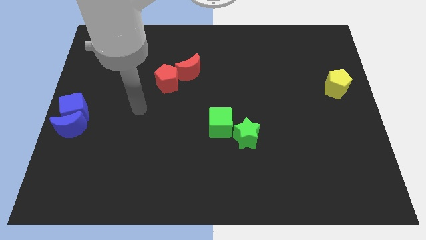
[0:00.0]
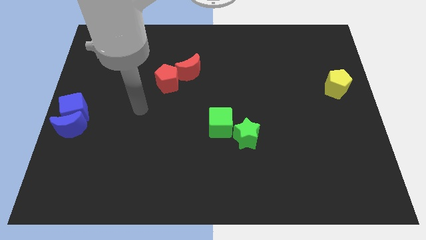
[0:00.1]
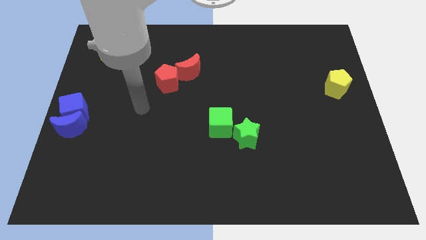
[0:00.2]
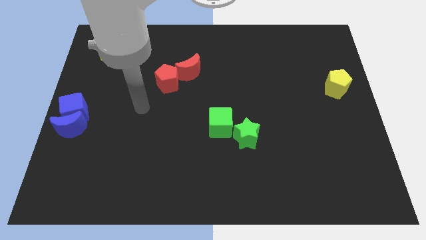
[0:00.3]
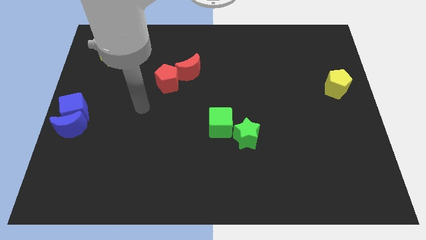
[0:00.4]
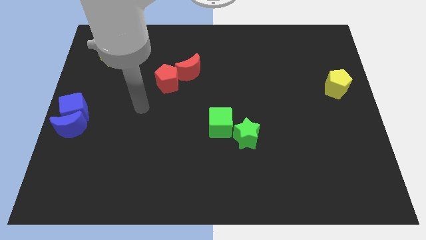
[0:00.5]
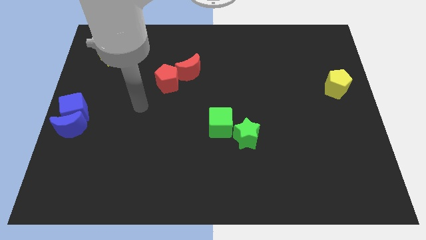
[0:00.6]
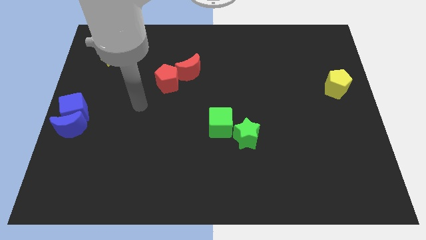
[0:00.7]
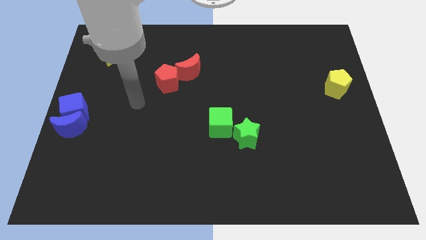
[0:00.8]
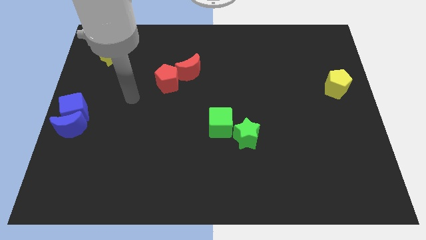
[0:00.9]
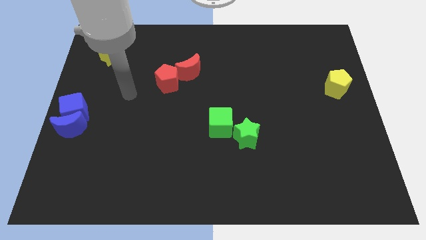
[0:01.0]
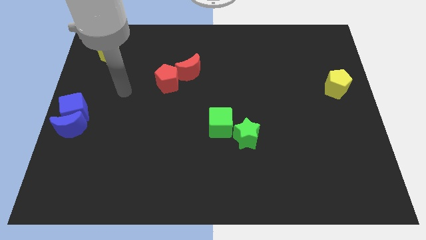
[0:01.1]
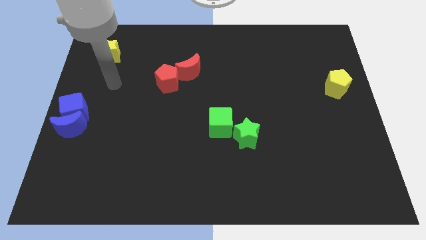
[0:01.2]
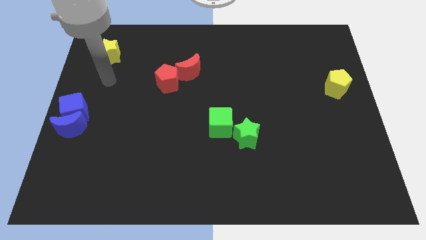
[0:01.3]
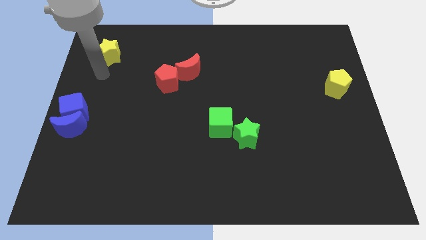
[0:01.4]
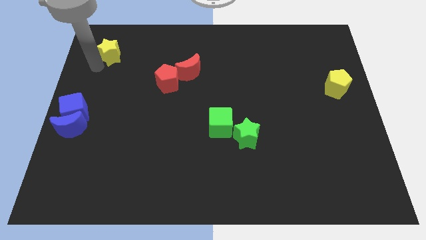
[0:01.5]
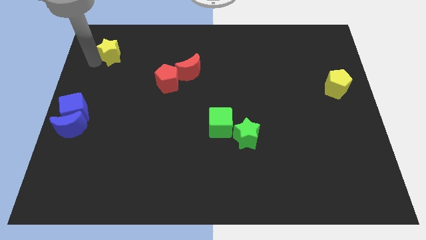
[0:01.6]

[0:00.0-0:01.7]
place your arm to the bottom of yellow star

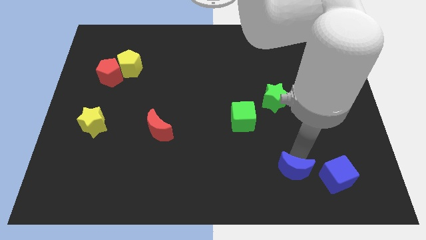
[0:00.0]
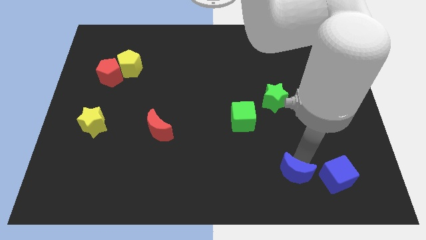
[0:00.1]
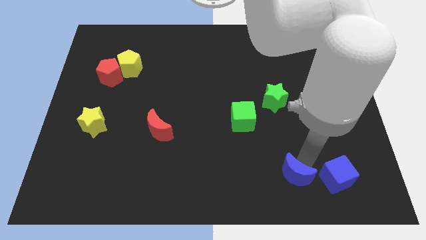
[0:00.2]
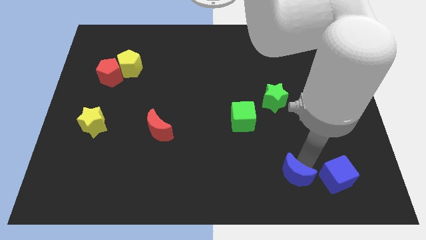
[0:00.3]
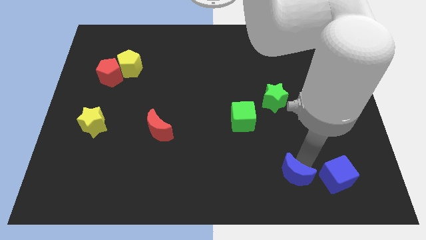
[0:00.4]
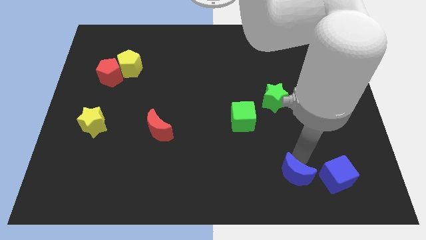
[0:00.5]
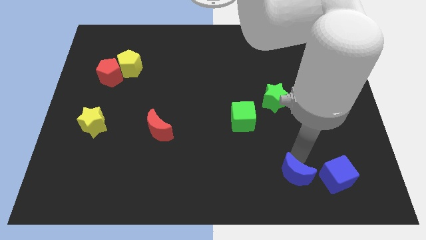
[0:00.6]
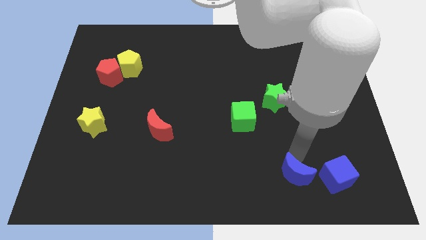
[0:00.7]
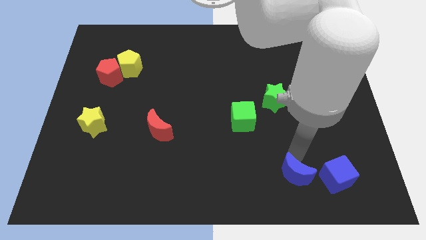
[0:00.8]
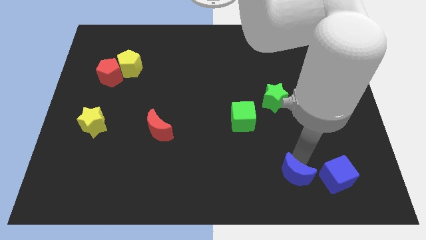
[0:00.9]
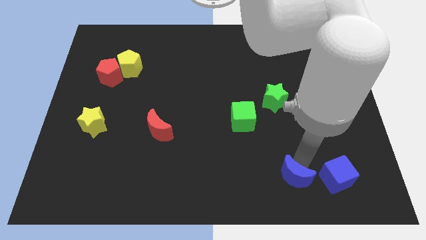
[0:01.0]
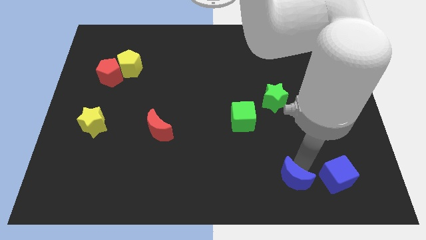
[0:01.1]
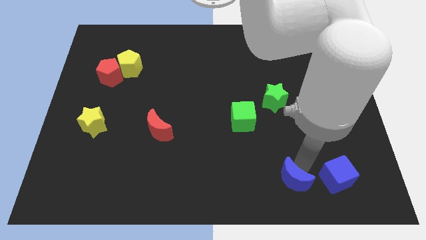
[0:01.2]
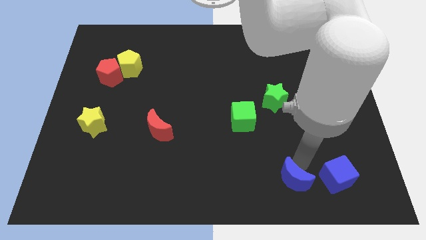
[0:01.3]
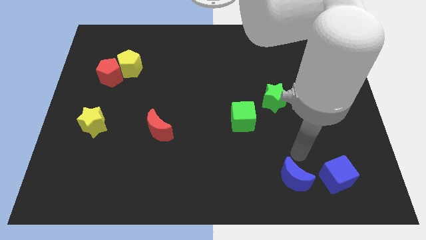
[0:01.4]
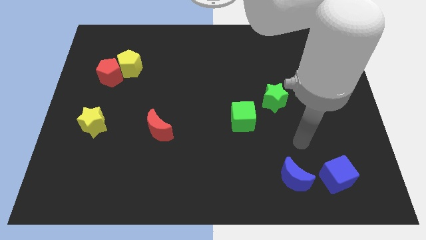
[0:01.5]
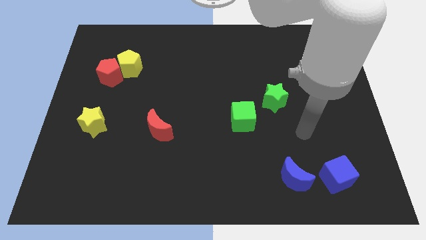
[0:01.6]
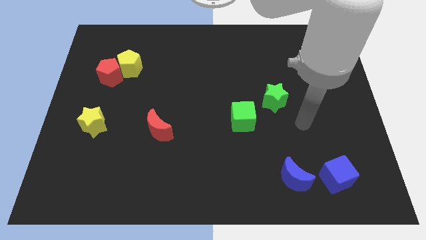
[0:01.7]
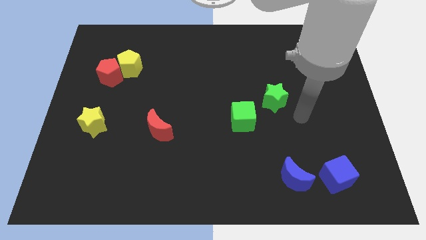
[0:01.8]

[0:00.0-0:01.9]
move the blue crescent to the left of the blue cube

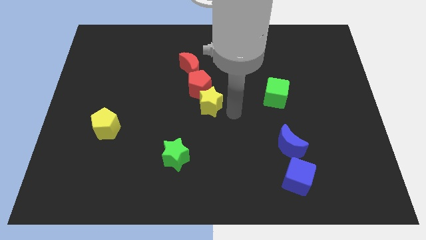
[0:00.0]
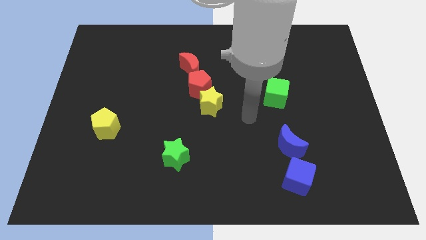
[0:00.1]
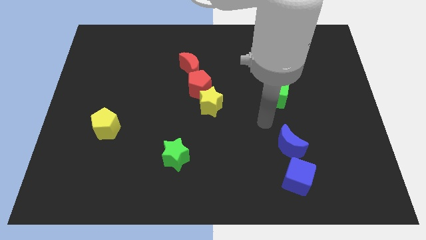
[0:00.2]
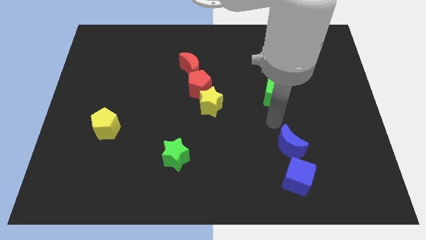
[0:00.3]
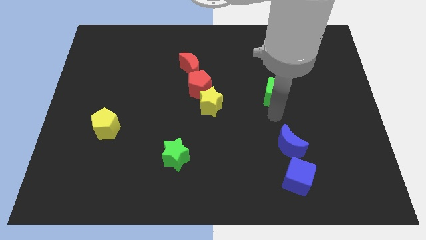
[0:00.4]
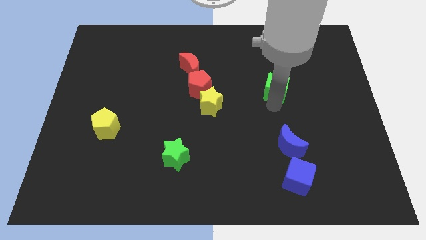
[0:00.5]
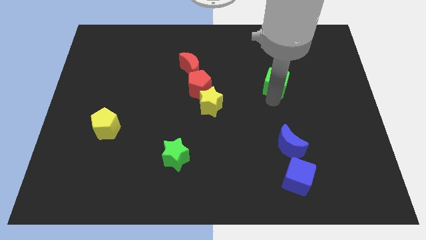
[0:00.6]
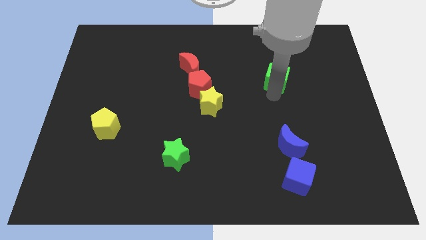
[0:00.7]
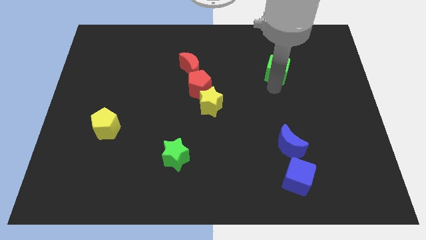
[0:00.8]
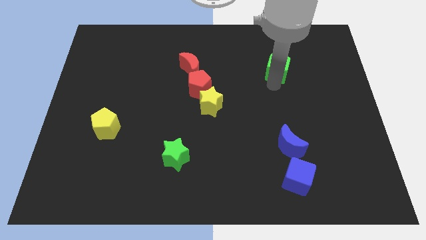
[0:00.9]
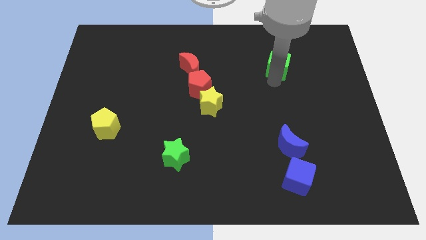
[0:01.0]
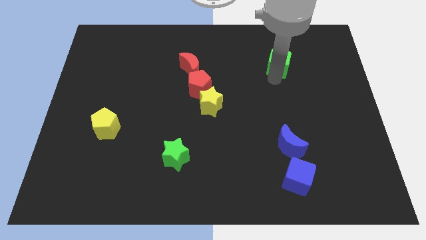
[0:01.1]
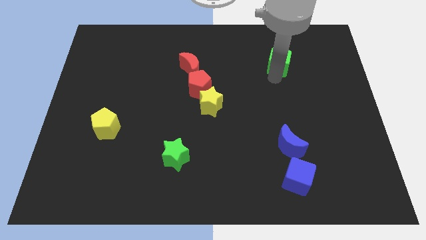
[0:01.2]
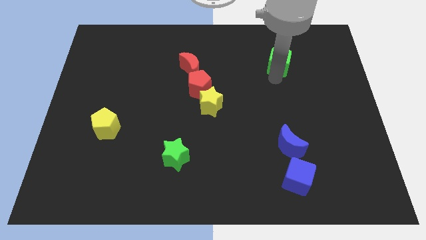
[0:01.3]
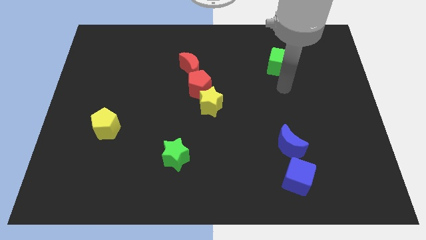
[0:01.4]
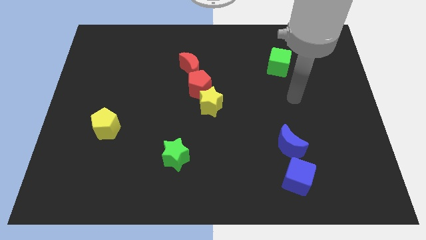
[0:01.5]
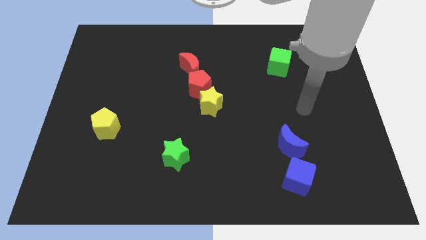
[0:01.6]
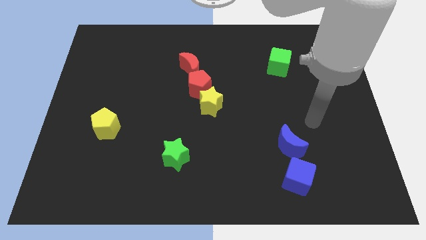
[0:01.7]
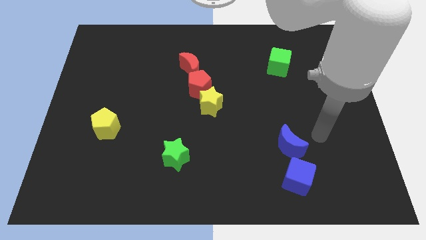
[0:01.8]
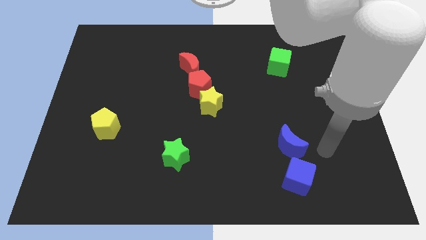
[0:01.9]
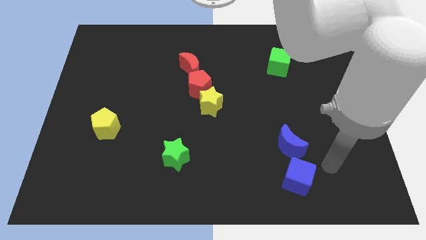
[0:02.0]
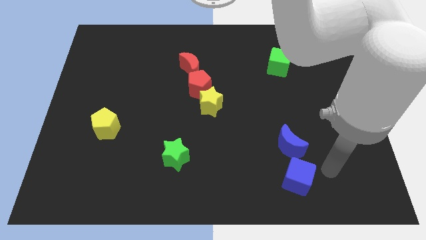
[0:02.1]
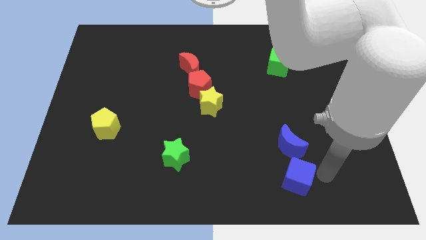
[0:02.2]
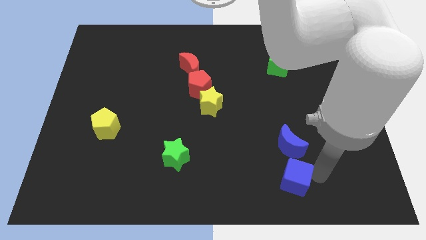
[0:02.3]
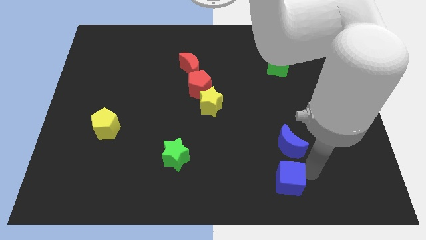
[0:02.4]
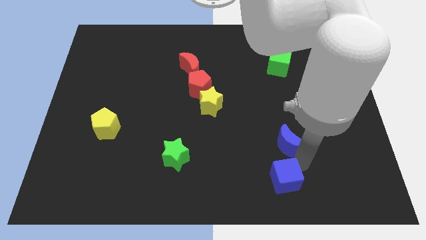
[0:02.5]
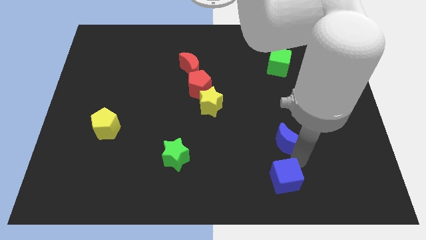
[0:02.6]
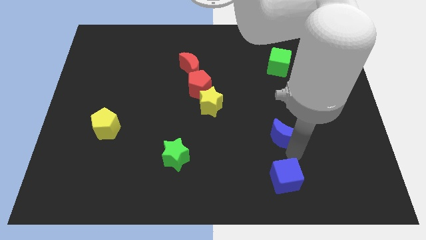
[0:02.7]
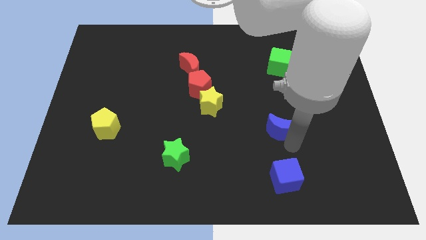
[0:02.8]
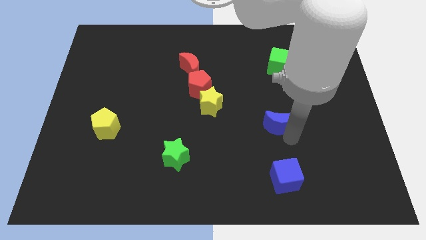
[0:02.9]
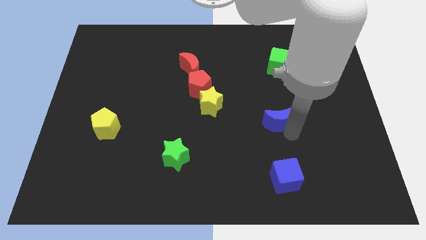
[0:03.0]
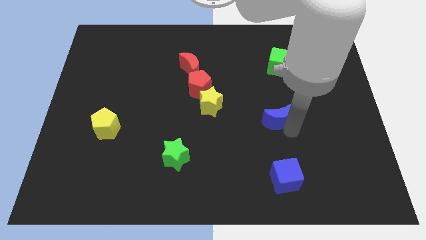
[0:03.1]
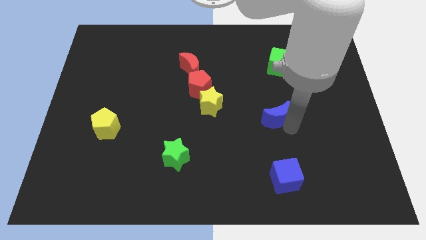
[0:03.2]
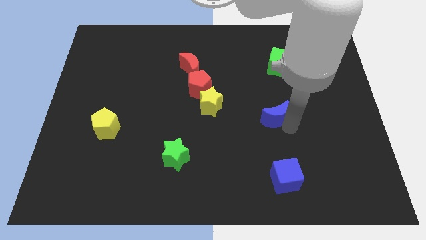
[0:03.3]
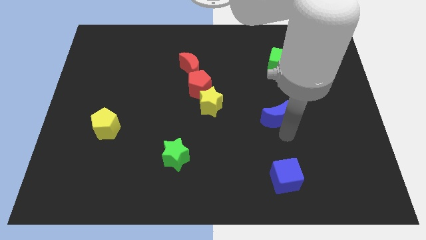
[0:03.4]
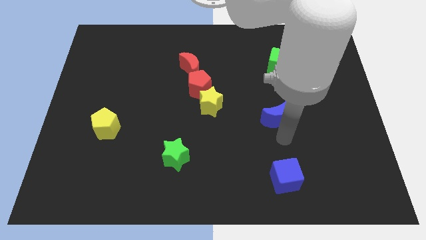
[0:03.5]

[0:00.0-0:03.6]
move blue moon towards the green cube and blue cube

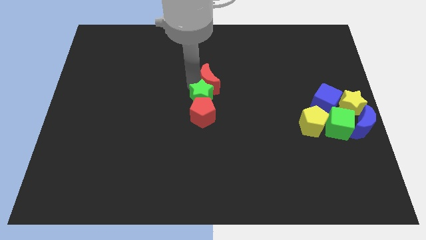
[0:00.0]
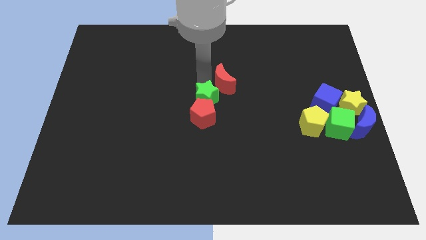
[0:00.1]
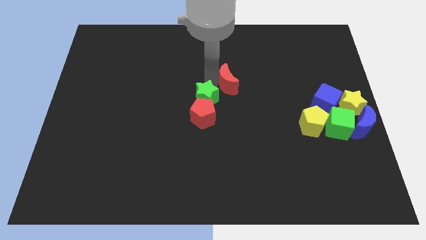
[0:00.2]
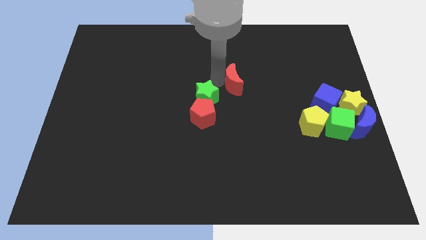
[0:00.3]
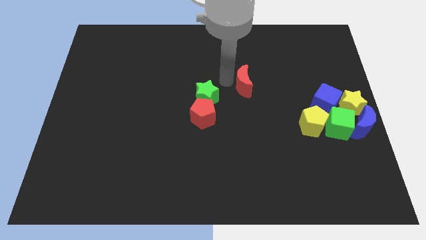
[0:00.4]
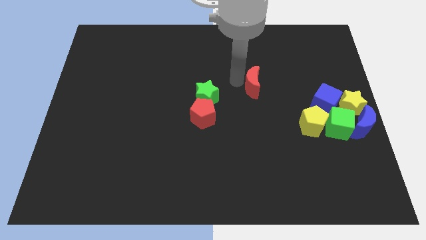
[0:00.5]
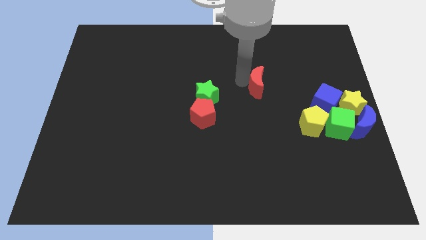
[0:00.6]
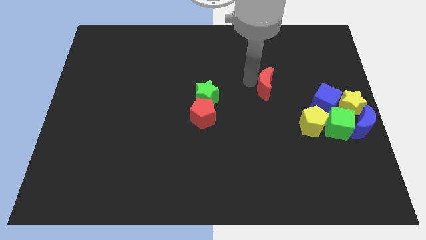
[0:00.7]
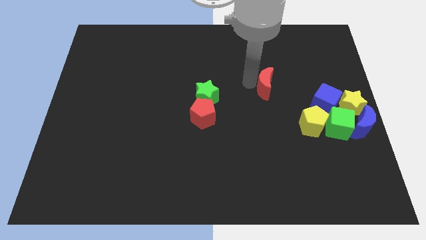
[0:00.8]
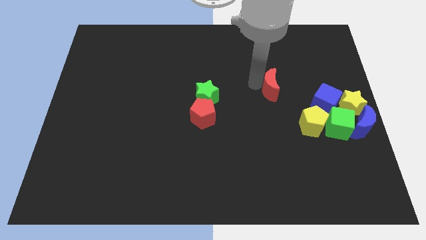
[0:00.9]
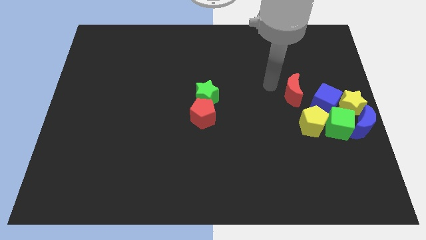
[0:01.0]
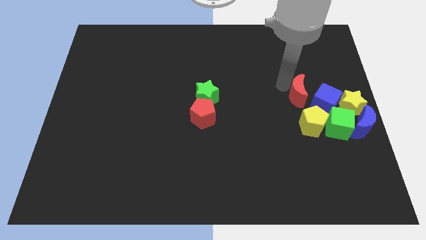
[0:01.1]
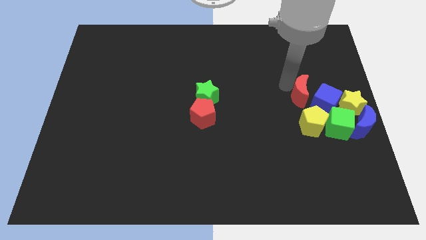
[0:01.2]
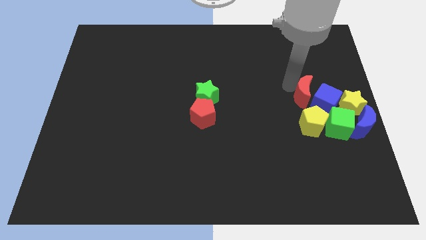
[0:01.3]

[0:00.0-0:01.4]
push the red moon to the right side of the board

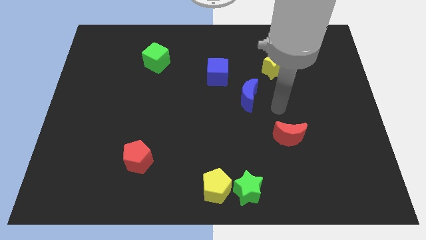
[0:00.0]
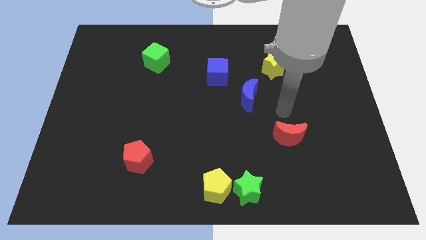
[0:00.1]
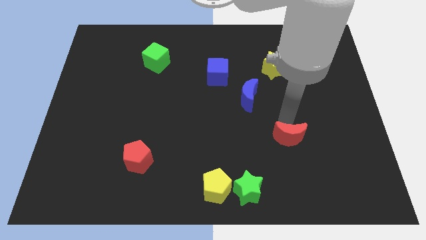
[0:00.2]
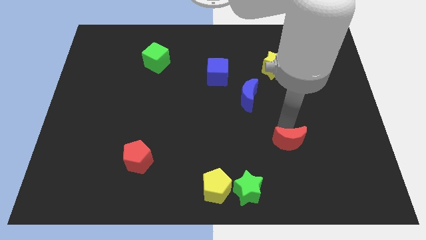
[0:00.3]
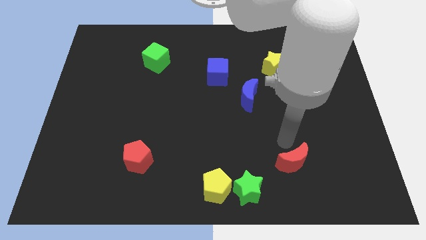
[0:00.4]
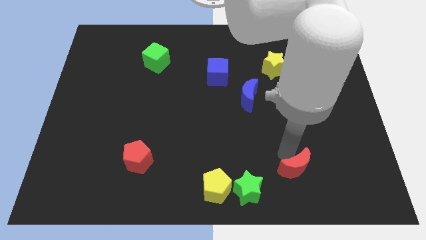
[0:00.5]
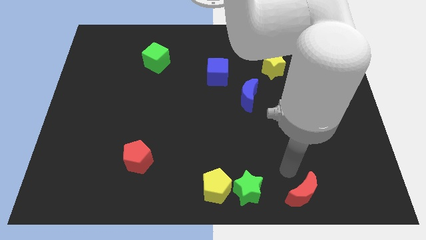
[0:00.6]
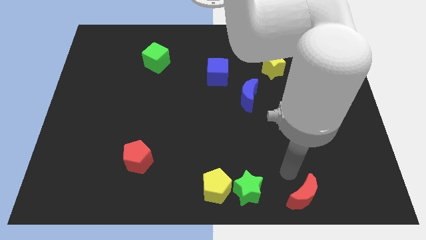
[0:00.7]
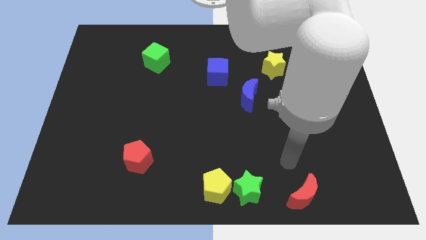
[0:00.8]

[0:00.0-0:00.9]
move the red moon to the right side of the green star
